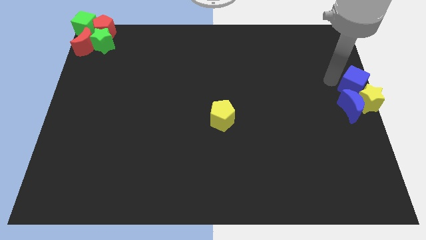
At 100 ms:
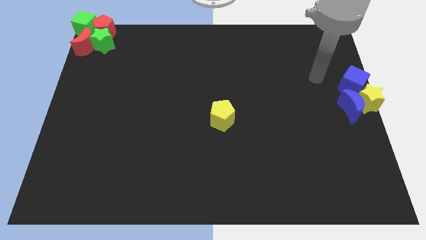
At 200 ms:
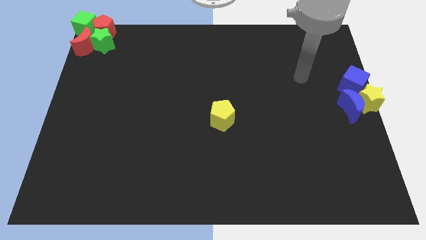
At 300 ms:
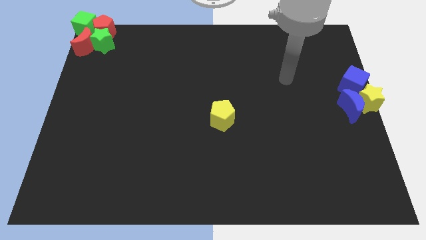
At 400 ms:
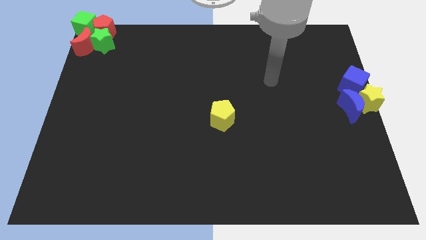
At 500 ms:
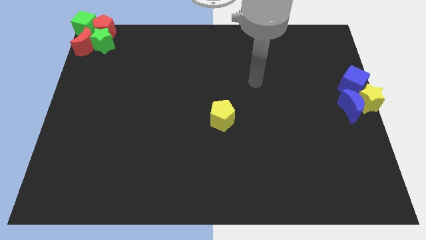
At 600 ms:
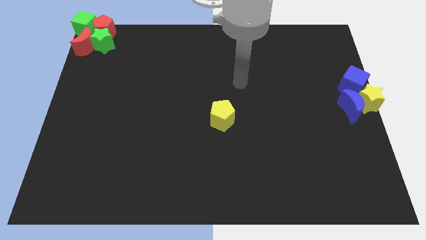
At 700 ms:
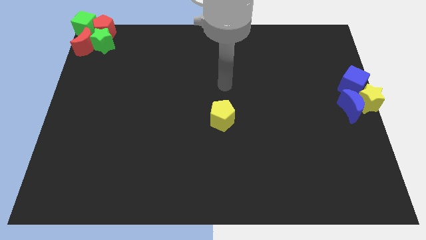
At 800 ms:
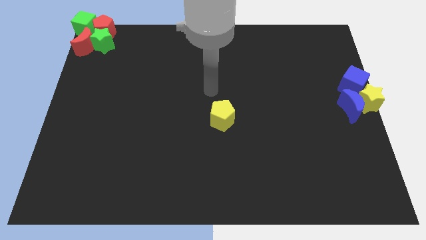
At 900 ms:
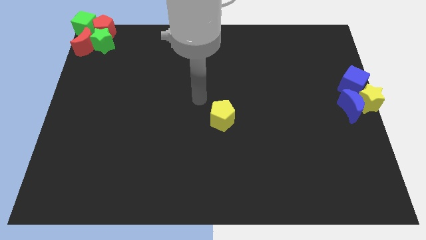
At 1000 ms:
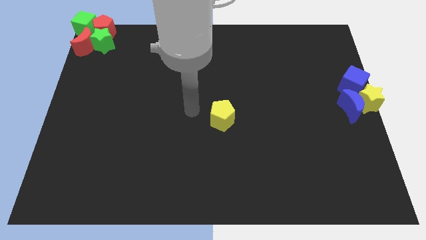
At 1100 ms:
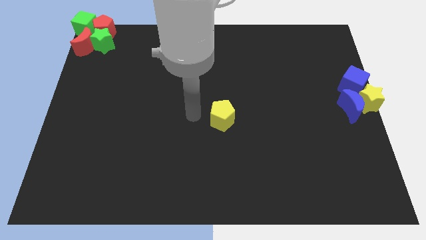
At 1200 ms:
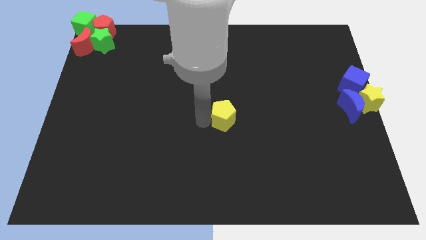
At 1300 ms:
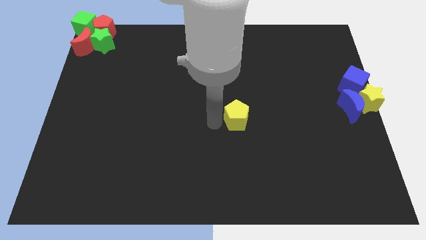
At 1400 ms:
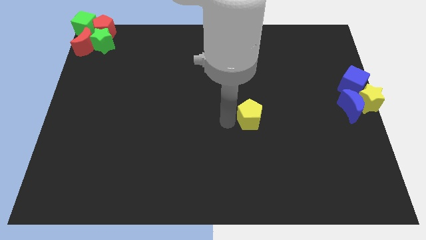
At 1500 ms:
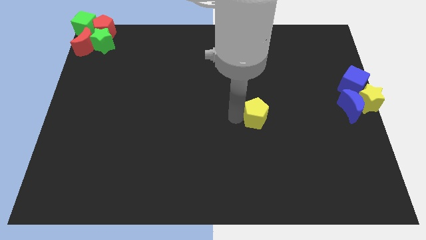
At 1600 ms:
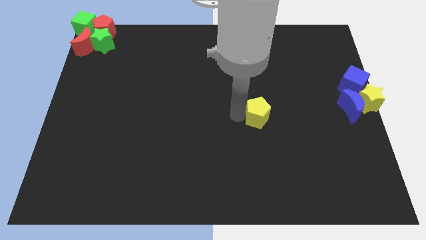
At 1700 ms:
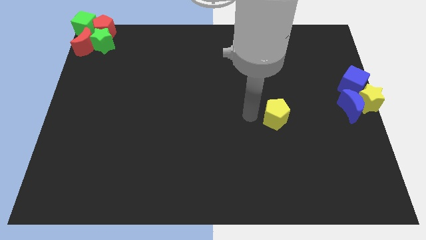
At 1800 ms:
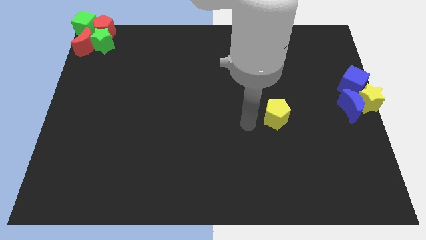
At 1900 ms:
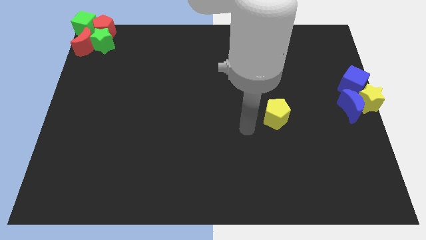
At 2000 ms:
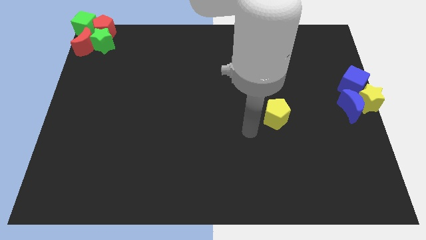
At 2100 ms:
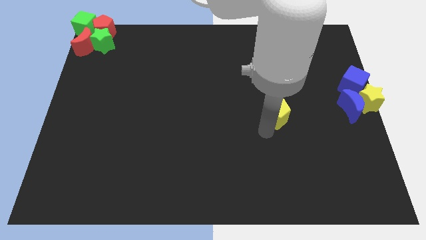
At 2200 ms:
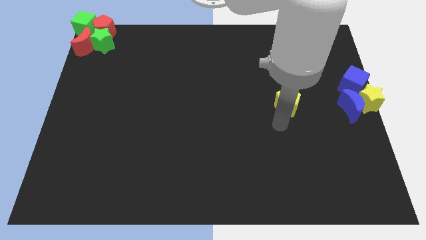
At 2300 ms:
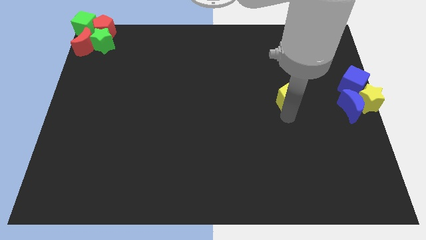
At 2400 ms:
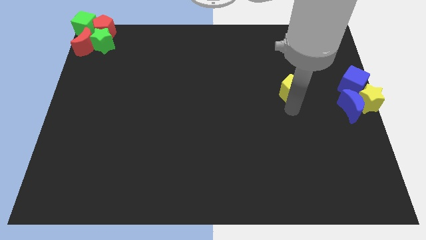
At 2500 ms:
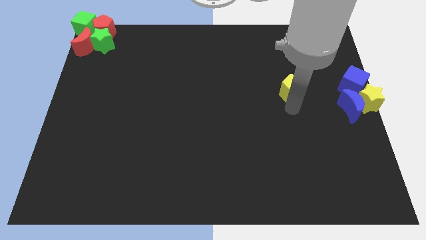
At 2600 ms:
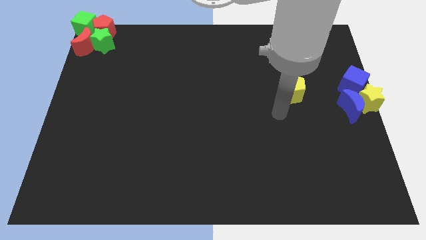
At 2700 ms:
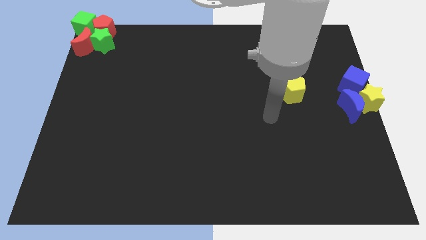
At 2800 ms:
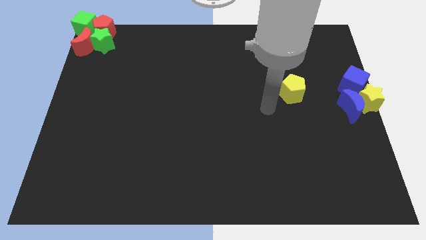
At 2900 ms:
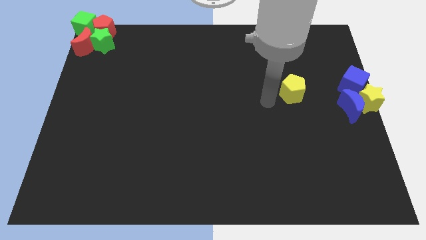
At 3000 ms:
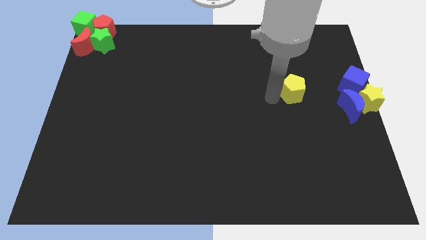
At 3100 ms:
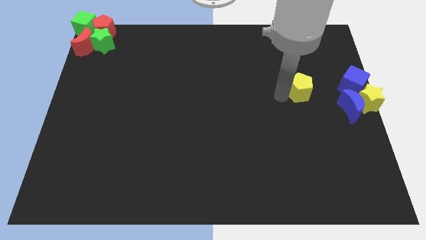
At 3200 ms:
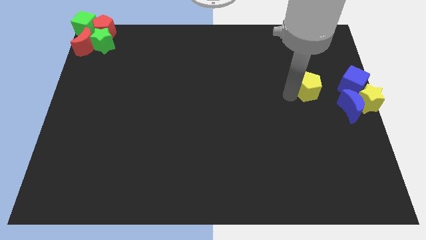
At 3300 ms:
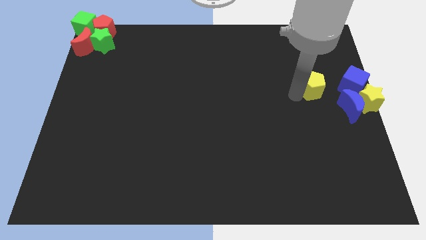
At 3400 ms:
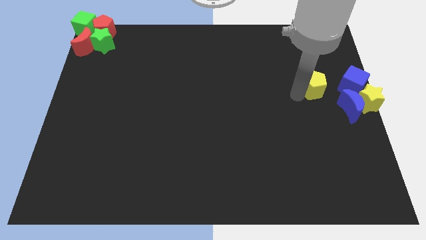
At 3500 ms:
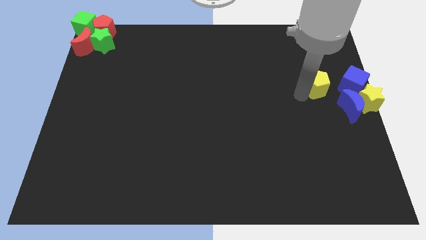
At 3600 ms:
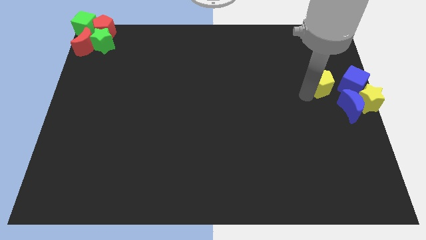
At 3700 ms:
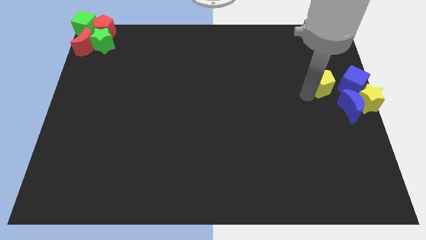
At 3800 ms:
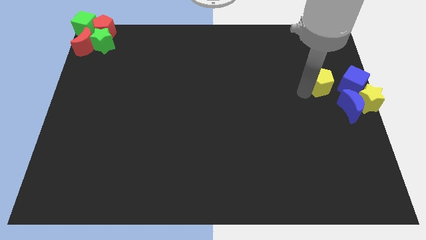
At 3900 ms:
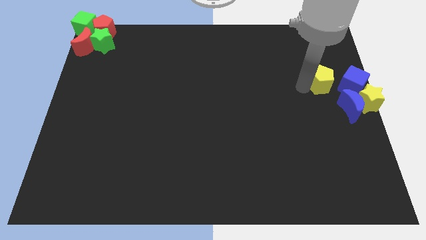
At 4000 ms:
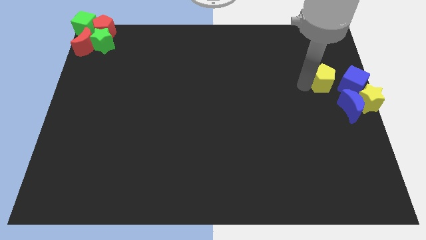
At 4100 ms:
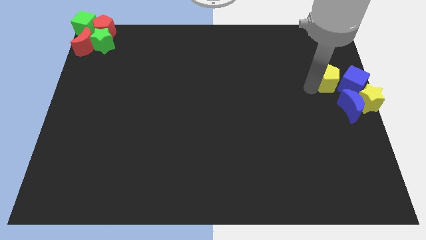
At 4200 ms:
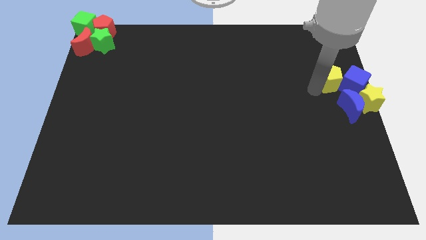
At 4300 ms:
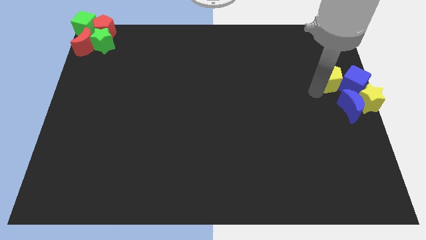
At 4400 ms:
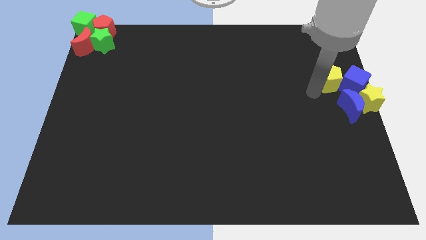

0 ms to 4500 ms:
slide the yellow pentagon into the left side of the blue cube

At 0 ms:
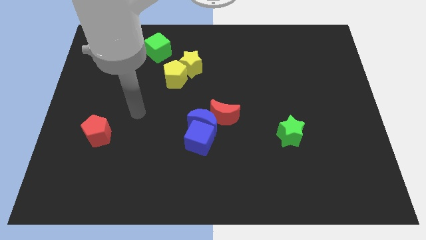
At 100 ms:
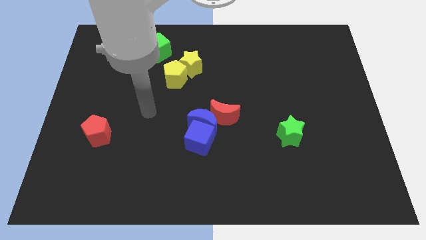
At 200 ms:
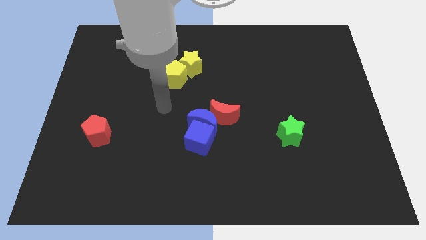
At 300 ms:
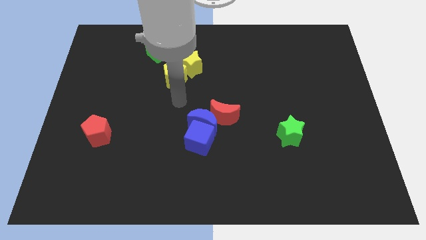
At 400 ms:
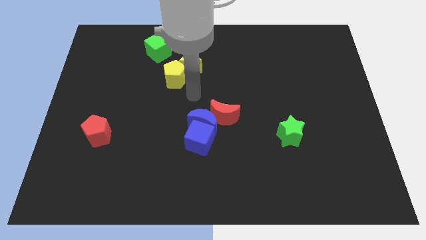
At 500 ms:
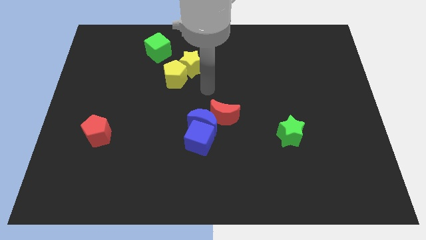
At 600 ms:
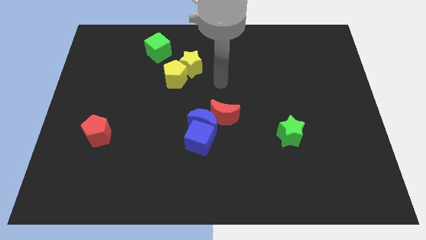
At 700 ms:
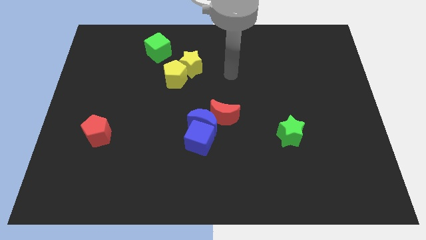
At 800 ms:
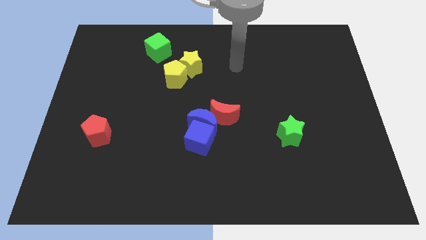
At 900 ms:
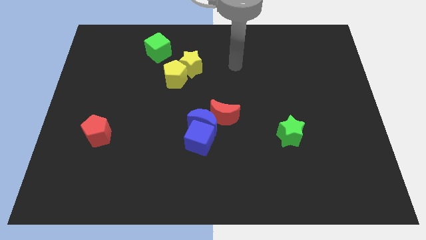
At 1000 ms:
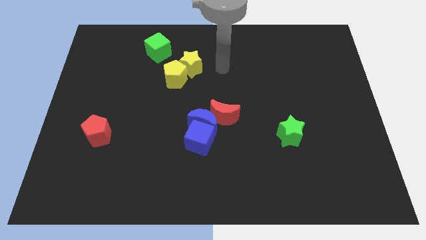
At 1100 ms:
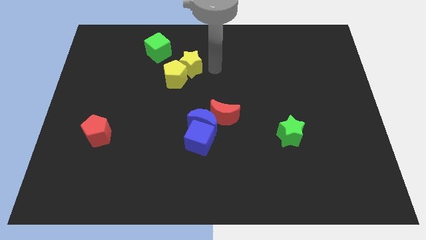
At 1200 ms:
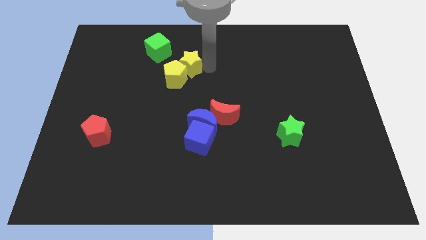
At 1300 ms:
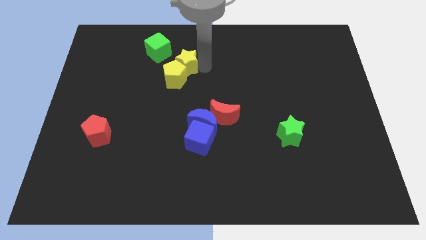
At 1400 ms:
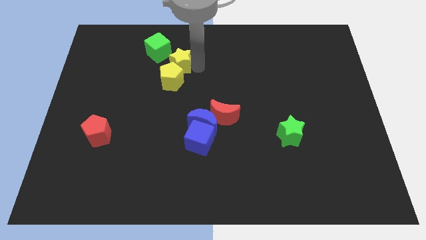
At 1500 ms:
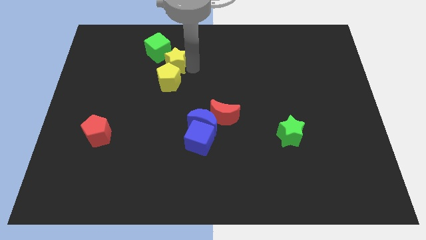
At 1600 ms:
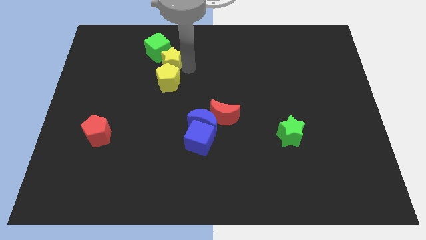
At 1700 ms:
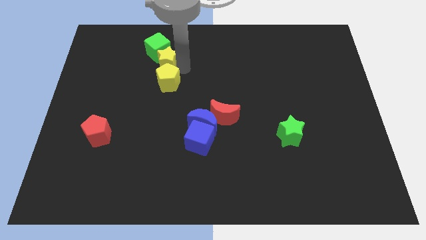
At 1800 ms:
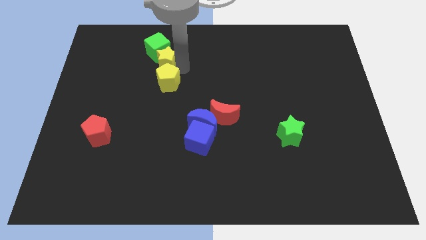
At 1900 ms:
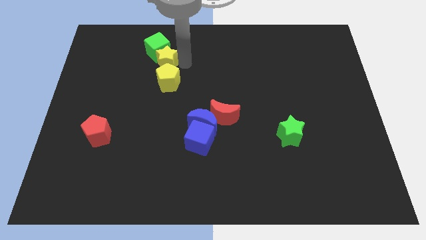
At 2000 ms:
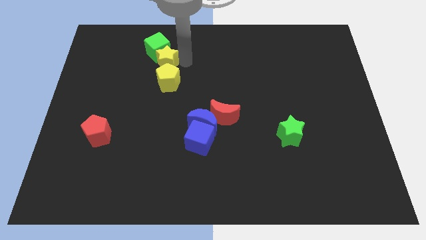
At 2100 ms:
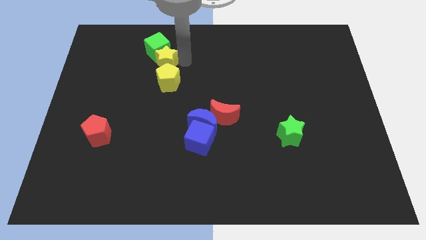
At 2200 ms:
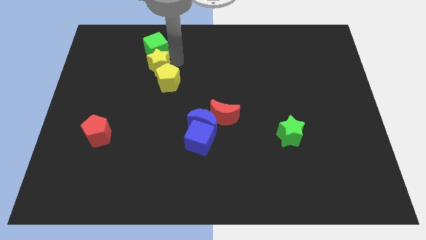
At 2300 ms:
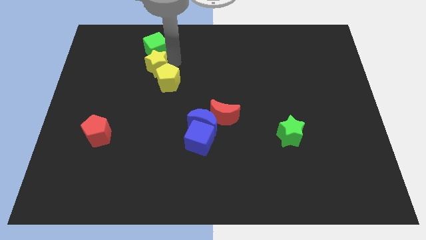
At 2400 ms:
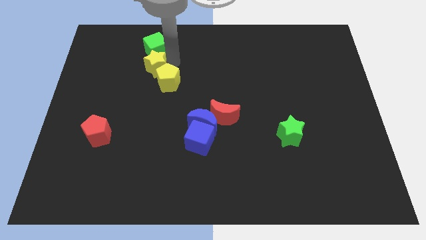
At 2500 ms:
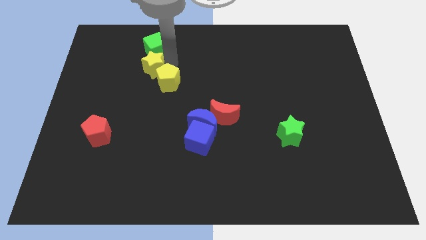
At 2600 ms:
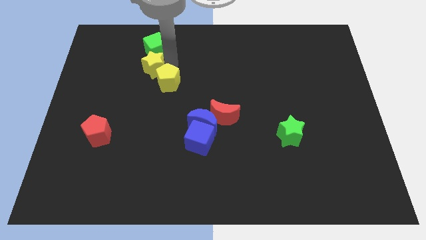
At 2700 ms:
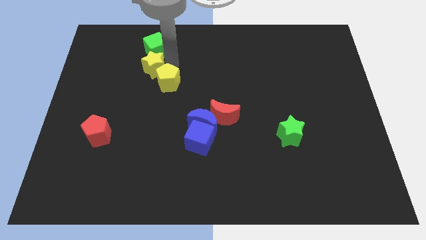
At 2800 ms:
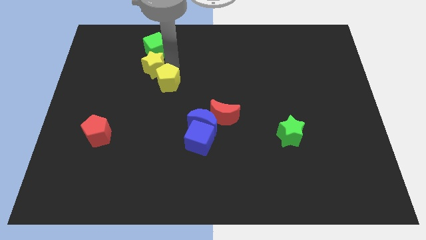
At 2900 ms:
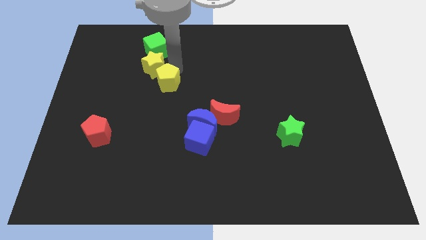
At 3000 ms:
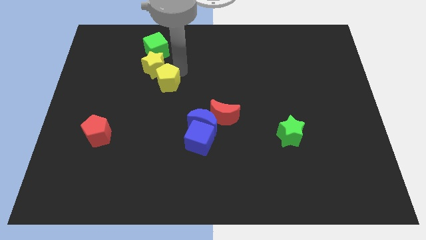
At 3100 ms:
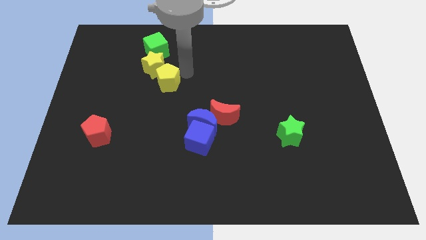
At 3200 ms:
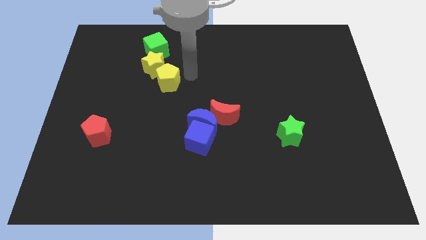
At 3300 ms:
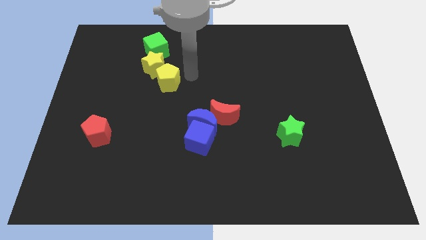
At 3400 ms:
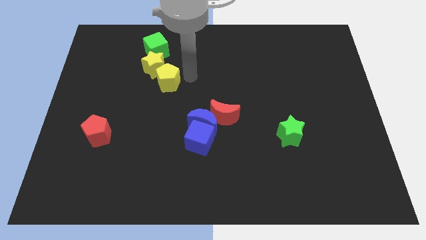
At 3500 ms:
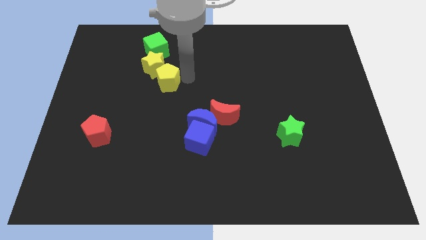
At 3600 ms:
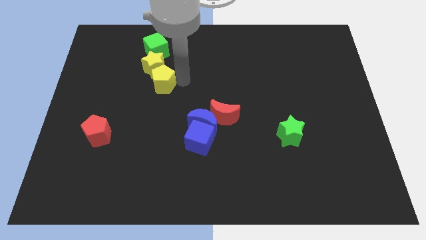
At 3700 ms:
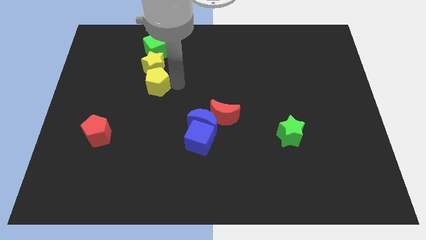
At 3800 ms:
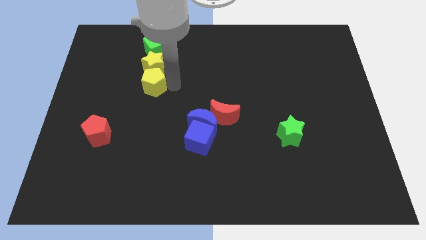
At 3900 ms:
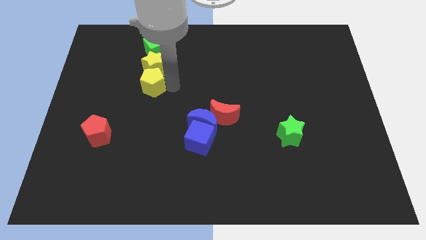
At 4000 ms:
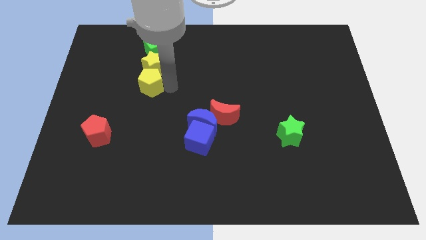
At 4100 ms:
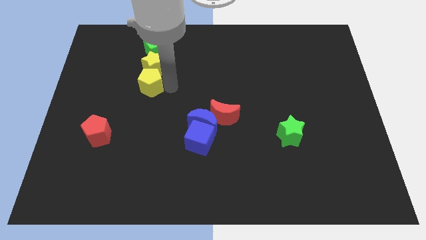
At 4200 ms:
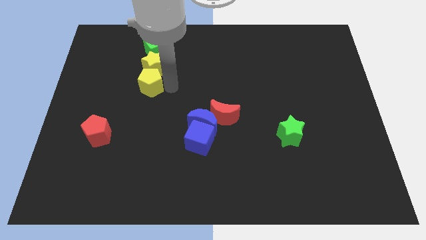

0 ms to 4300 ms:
make a vertical line with the yellow blocks and green cube

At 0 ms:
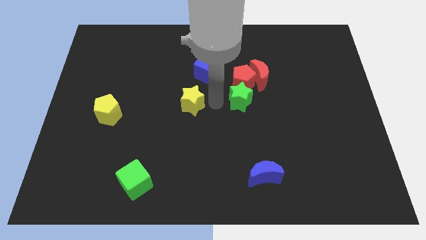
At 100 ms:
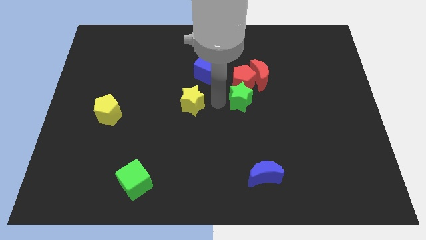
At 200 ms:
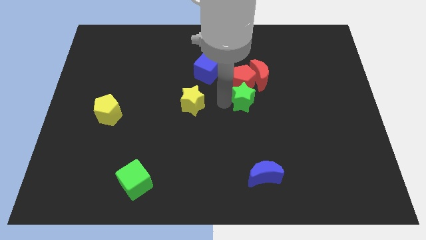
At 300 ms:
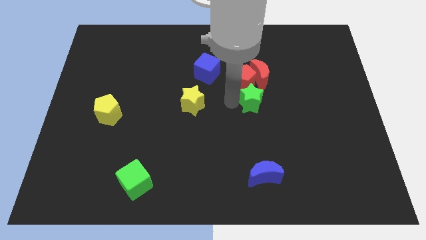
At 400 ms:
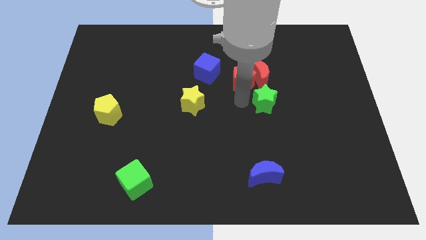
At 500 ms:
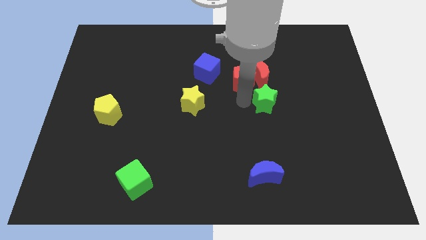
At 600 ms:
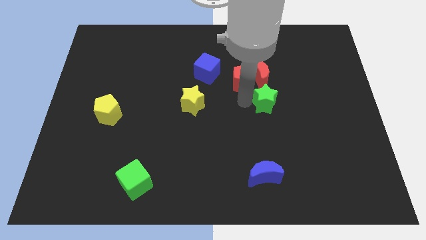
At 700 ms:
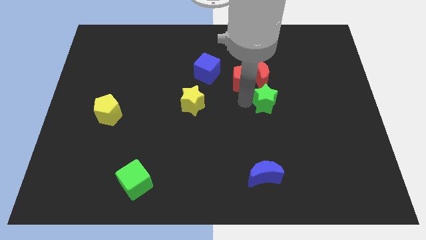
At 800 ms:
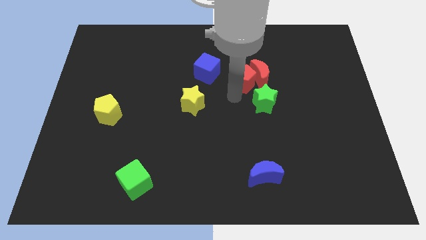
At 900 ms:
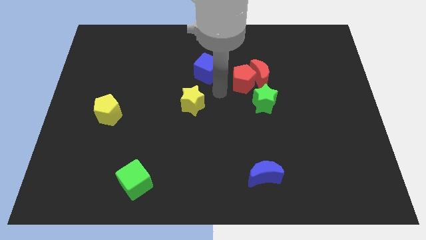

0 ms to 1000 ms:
separate the green star from the red pentagon
